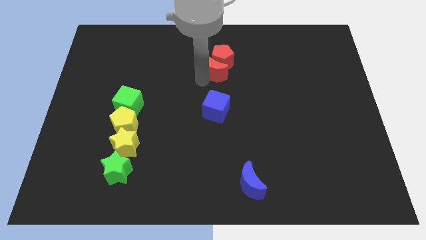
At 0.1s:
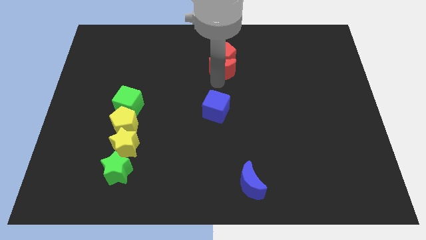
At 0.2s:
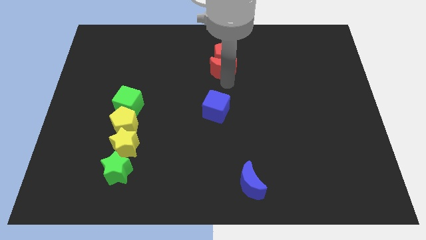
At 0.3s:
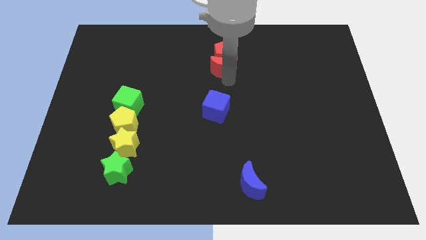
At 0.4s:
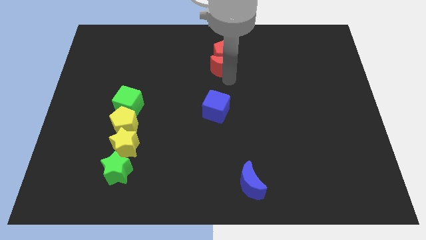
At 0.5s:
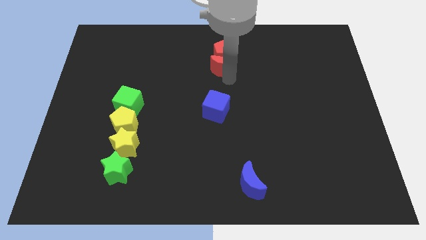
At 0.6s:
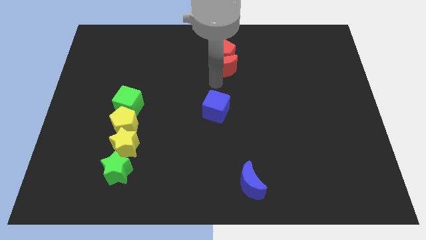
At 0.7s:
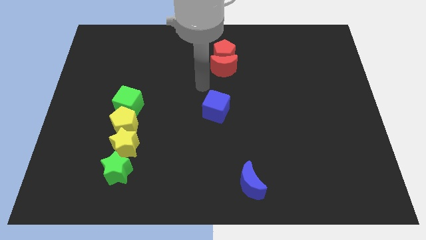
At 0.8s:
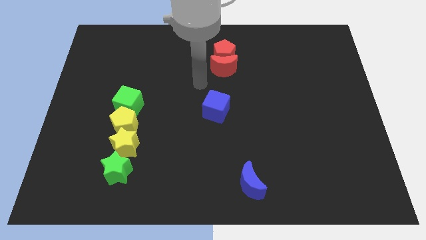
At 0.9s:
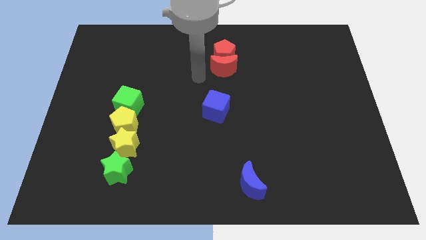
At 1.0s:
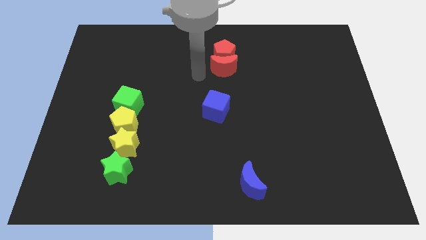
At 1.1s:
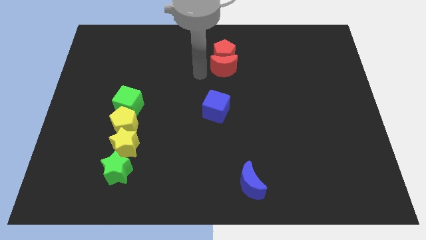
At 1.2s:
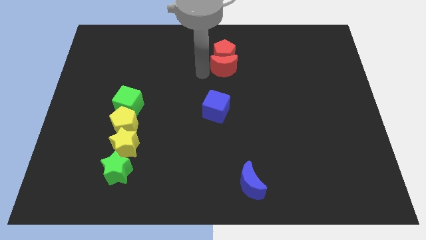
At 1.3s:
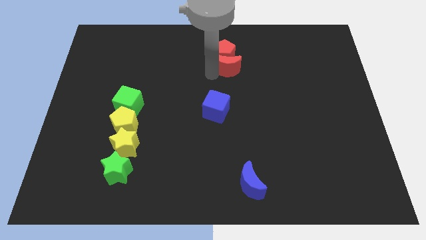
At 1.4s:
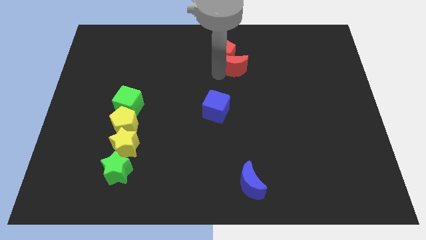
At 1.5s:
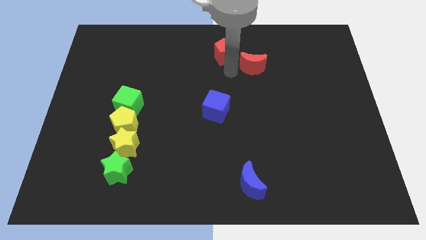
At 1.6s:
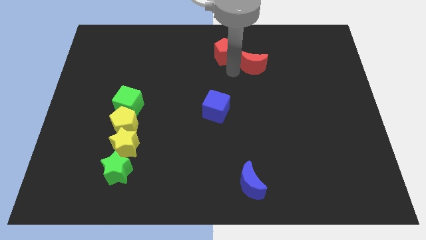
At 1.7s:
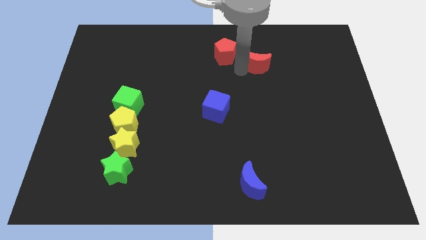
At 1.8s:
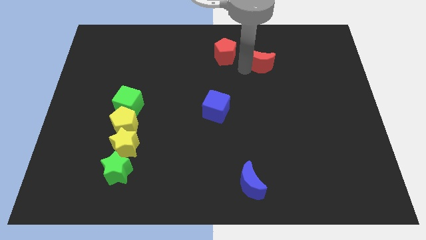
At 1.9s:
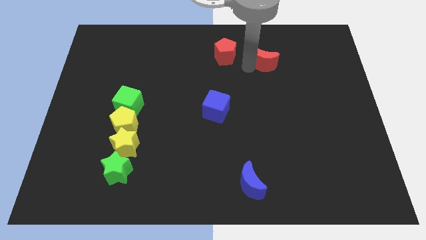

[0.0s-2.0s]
separate red crescent from red pentagon

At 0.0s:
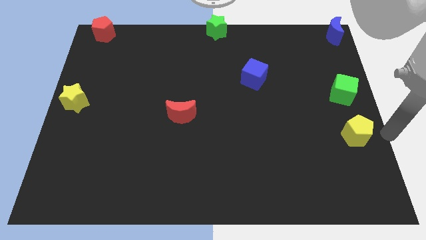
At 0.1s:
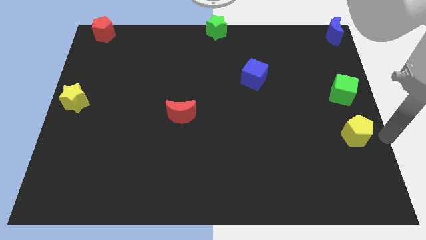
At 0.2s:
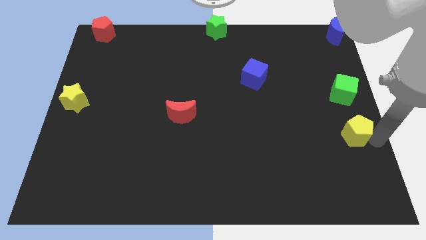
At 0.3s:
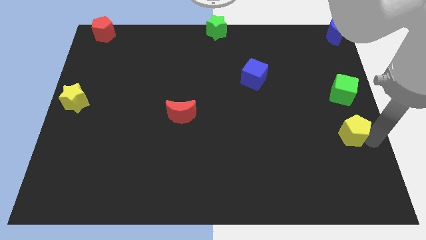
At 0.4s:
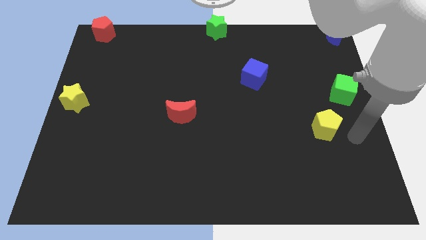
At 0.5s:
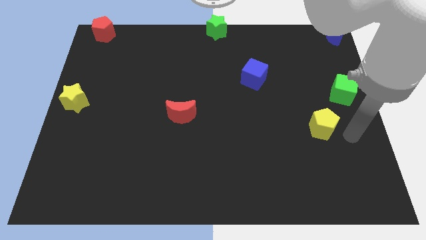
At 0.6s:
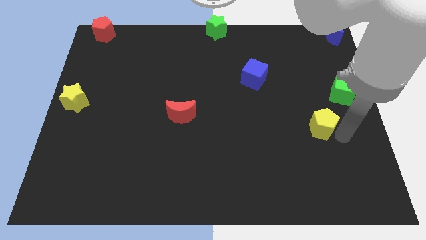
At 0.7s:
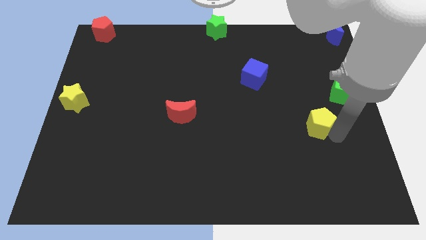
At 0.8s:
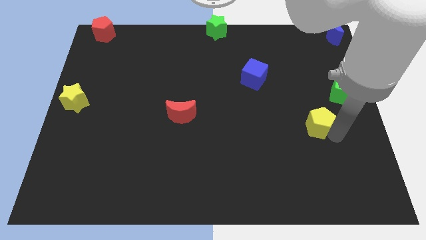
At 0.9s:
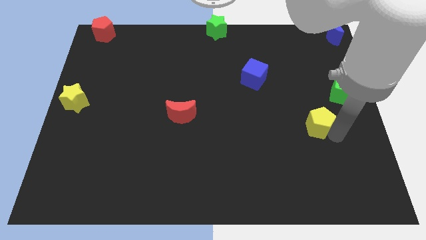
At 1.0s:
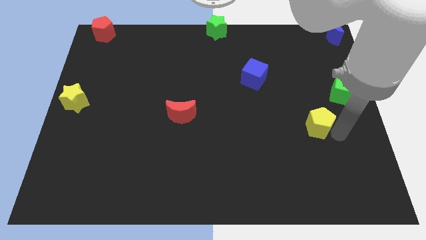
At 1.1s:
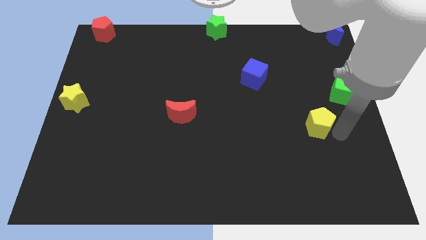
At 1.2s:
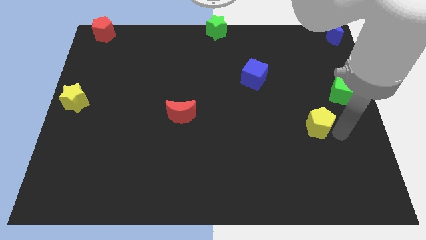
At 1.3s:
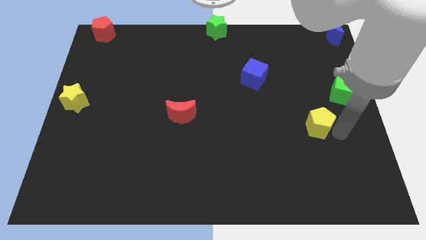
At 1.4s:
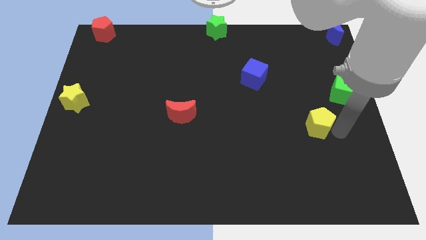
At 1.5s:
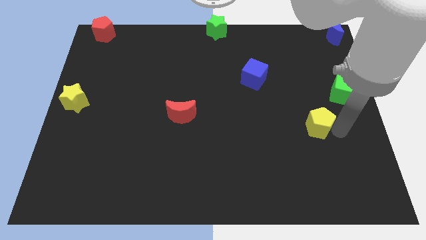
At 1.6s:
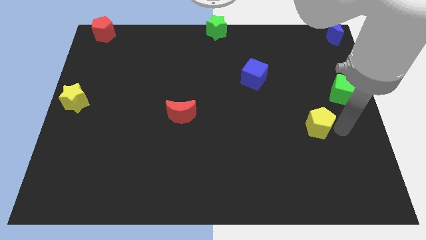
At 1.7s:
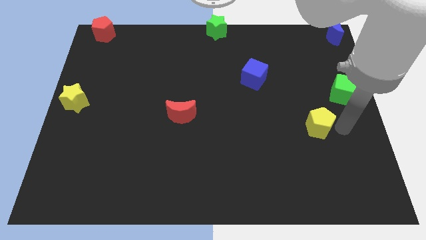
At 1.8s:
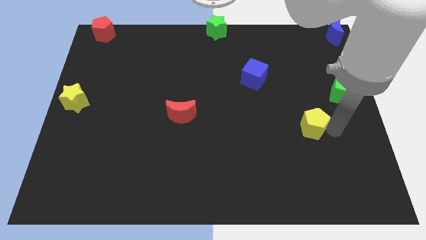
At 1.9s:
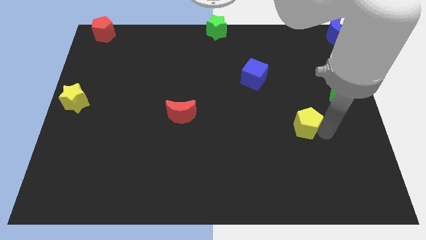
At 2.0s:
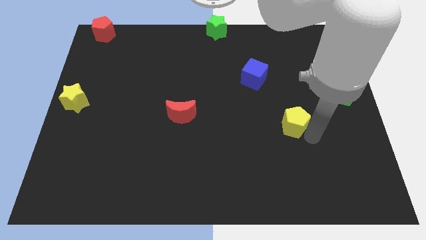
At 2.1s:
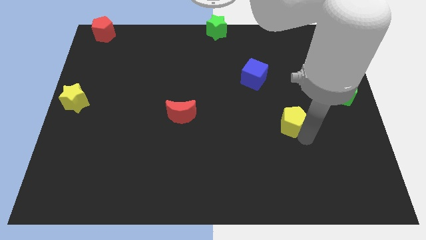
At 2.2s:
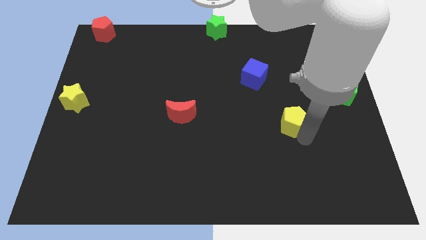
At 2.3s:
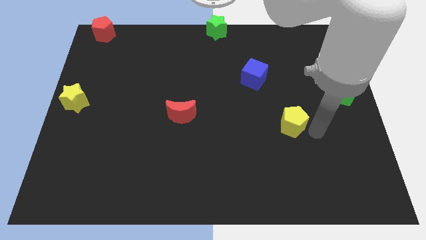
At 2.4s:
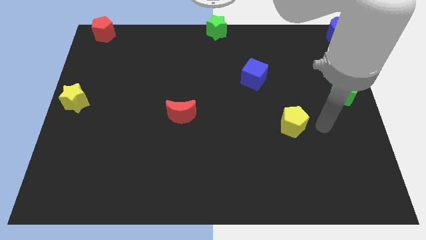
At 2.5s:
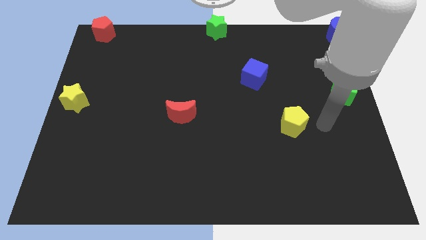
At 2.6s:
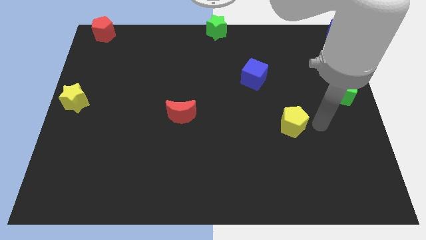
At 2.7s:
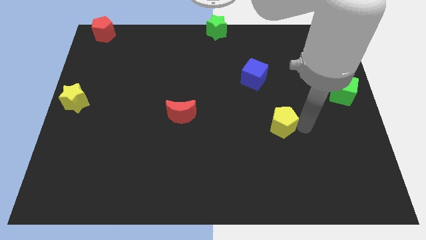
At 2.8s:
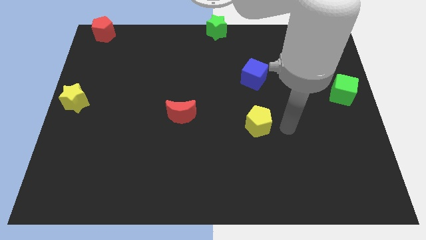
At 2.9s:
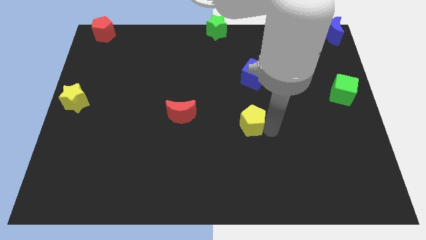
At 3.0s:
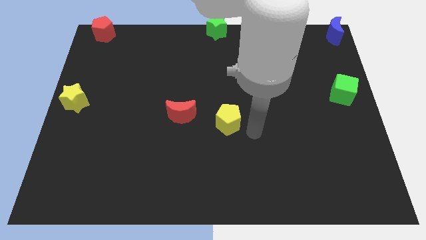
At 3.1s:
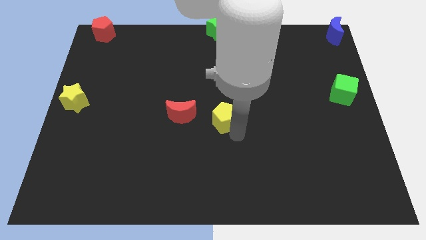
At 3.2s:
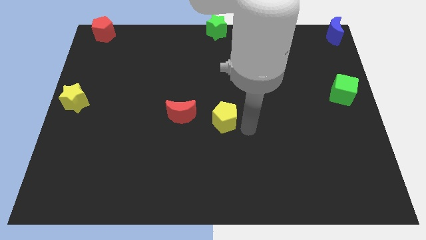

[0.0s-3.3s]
push the yellow pentagon towards the red crescent

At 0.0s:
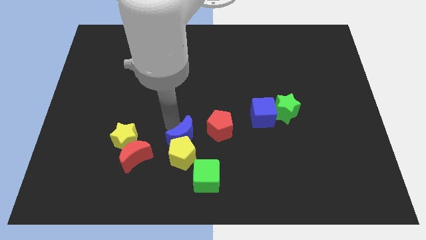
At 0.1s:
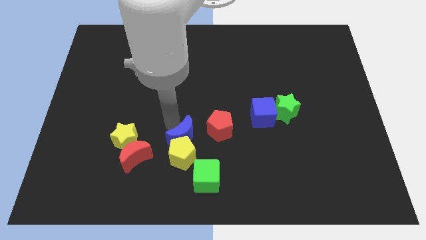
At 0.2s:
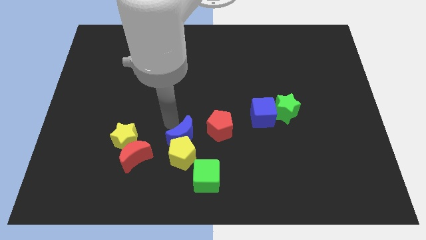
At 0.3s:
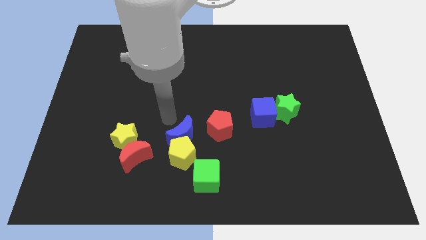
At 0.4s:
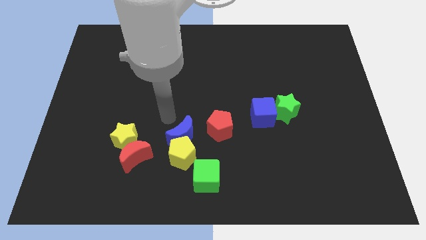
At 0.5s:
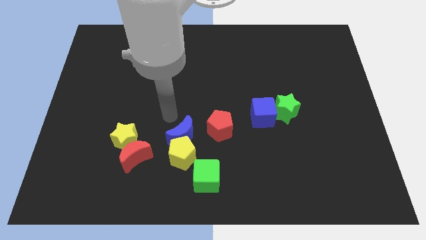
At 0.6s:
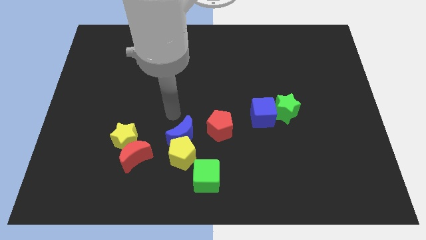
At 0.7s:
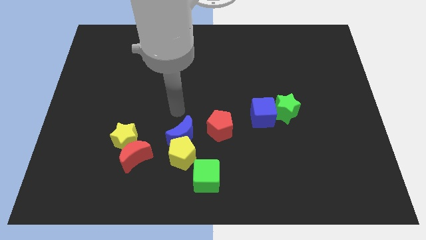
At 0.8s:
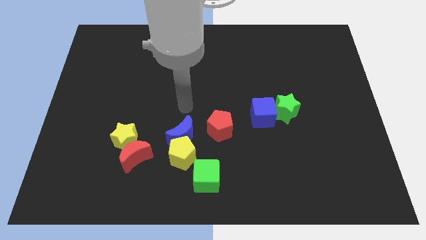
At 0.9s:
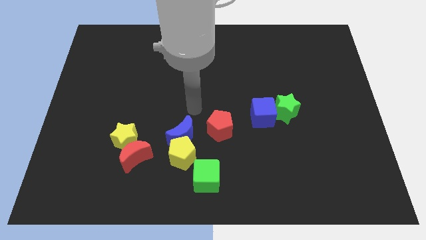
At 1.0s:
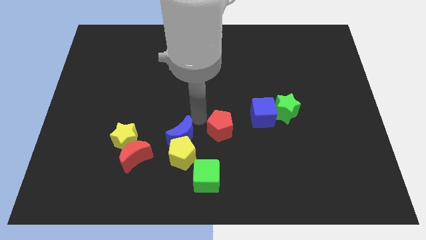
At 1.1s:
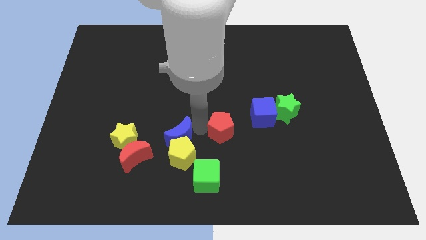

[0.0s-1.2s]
place the arm at the top of blue crescent and red pentagon

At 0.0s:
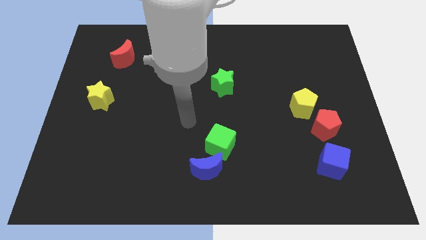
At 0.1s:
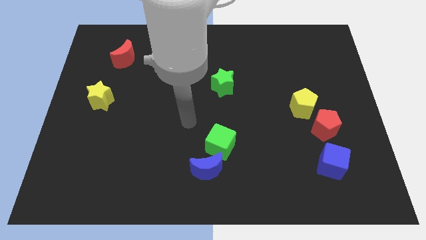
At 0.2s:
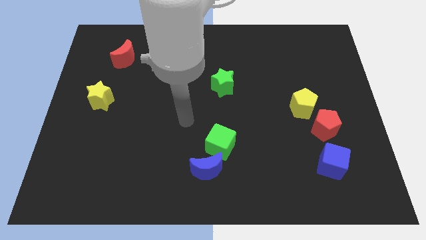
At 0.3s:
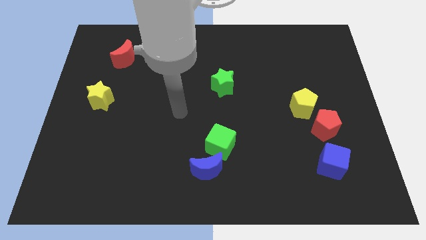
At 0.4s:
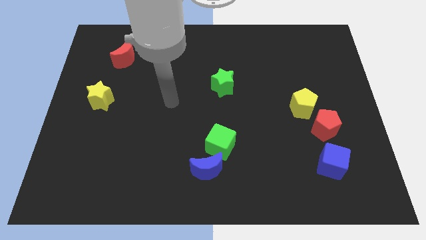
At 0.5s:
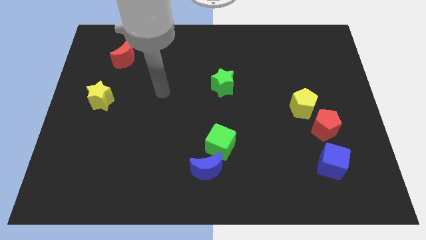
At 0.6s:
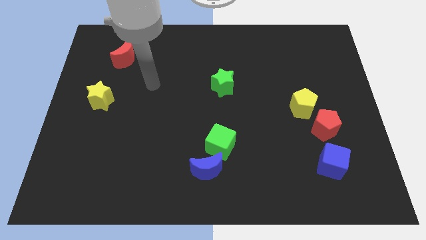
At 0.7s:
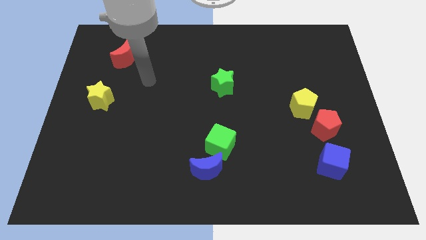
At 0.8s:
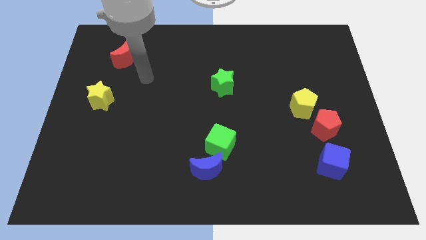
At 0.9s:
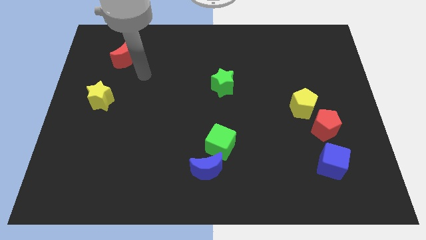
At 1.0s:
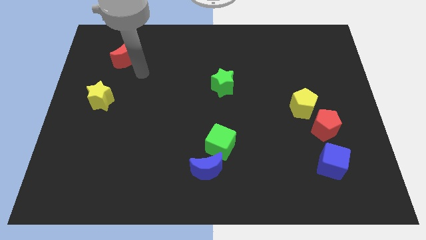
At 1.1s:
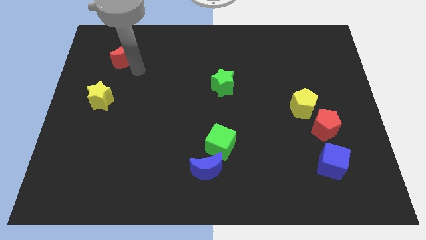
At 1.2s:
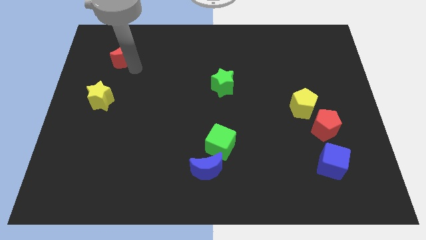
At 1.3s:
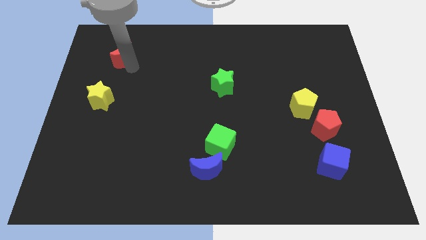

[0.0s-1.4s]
move your arm to the bottom of red moon

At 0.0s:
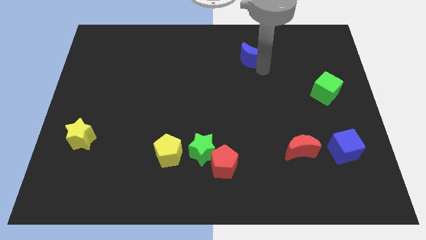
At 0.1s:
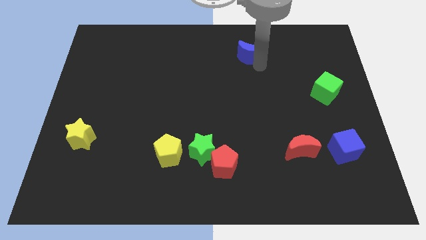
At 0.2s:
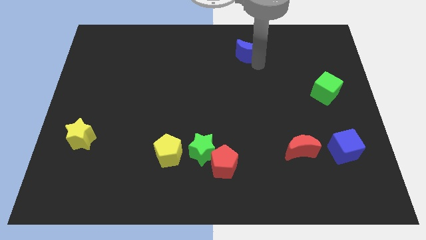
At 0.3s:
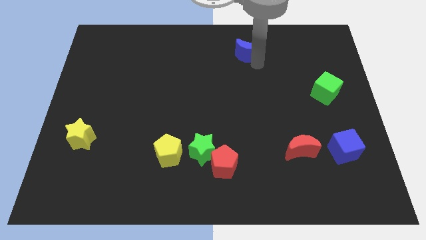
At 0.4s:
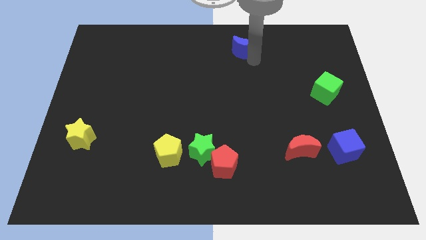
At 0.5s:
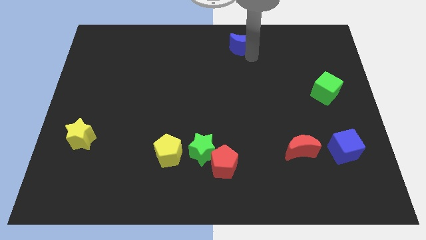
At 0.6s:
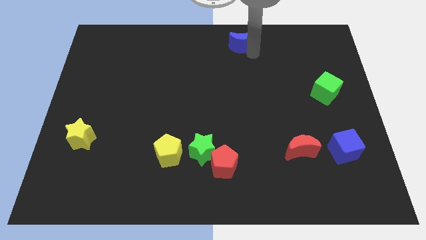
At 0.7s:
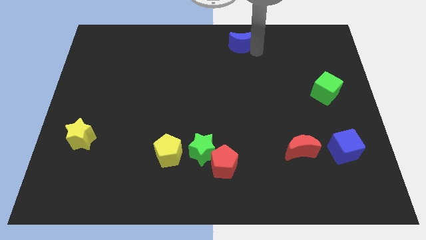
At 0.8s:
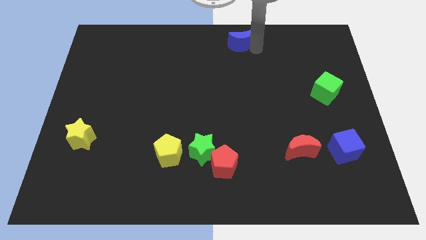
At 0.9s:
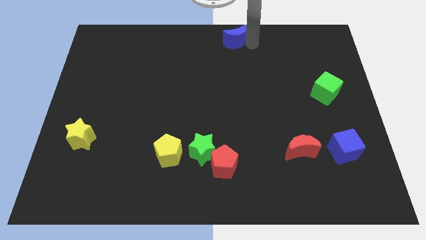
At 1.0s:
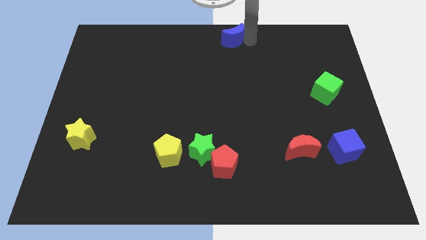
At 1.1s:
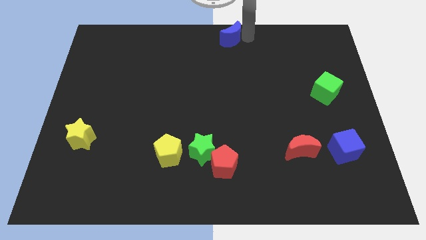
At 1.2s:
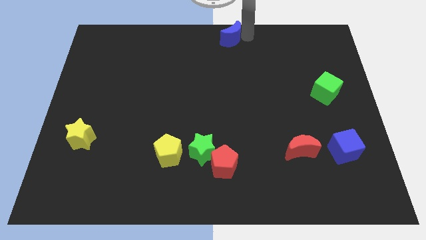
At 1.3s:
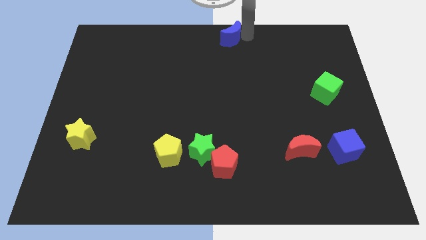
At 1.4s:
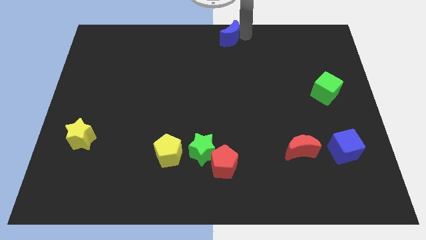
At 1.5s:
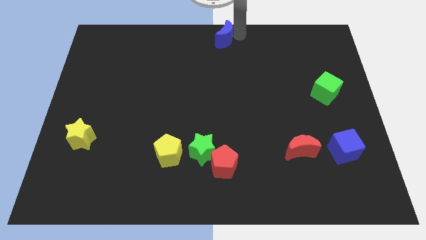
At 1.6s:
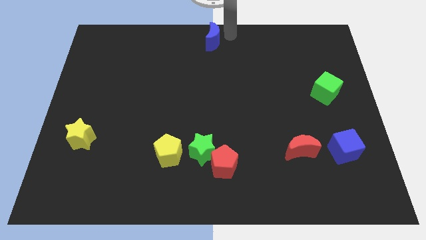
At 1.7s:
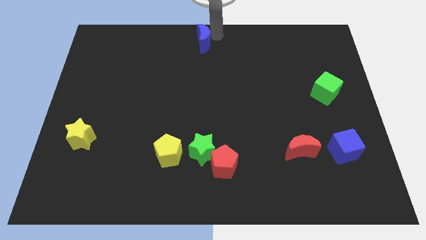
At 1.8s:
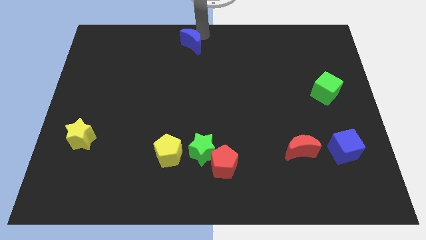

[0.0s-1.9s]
place the blue moon in a vertical line to the green star
